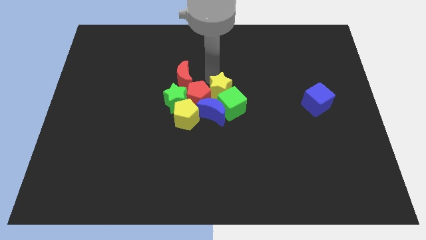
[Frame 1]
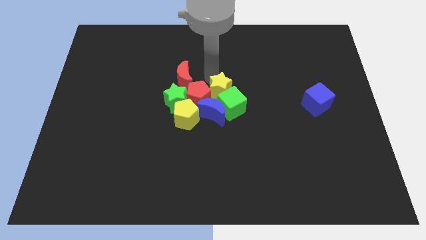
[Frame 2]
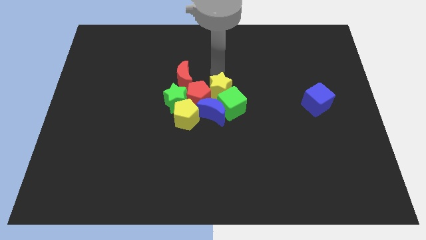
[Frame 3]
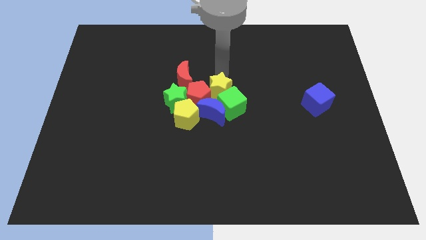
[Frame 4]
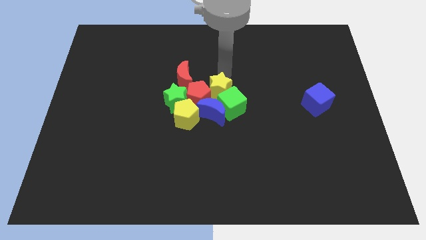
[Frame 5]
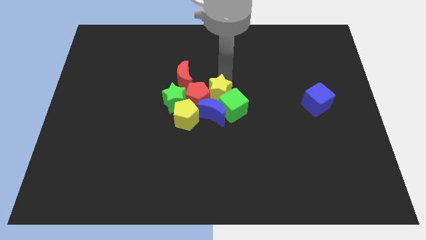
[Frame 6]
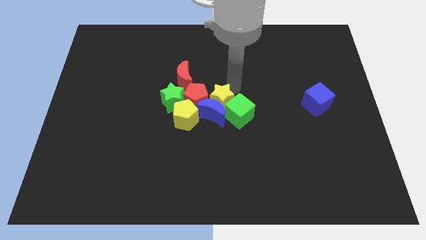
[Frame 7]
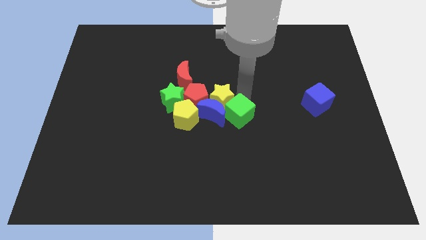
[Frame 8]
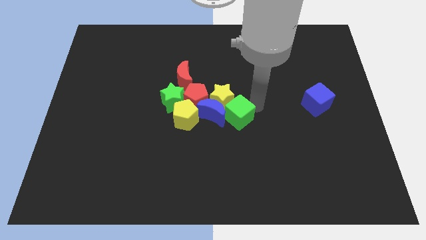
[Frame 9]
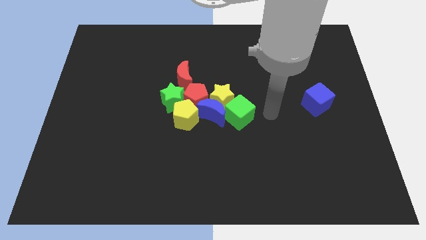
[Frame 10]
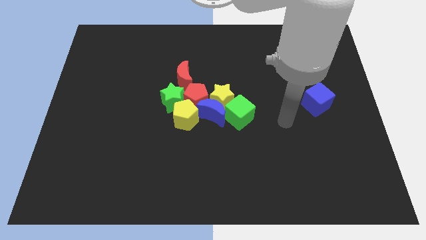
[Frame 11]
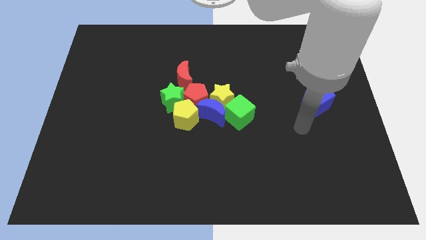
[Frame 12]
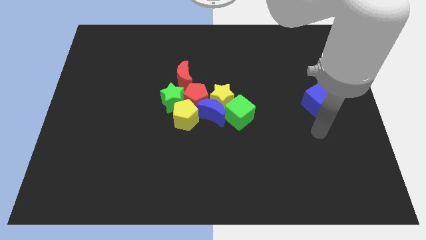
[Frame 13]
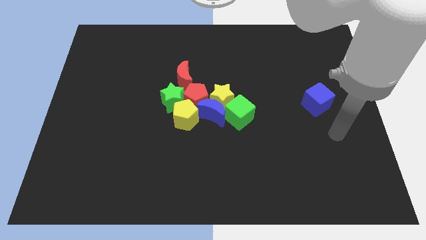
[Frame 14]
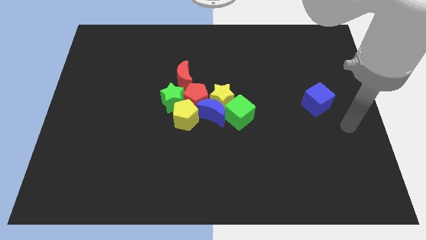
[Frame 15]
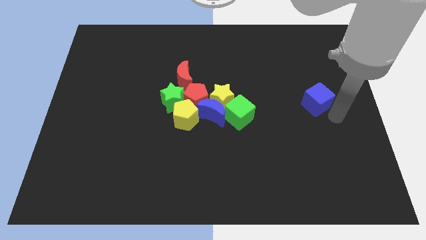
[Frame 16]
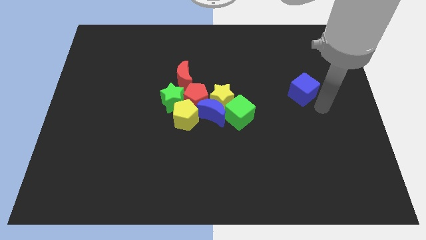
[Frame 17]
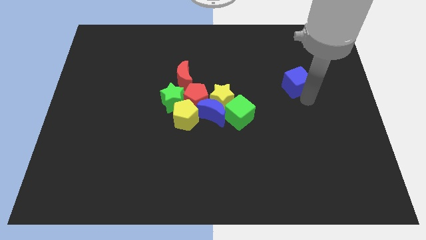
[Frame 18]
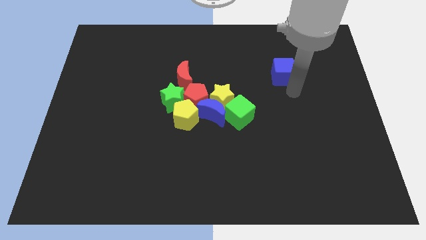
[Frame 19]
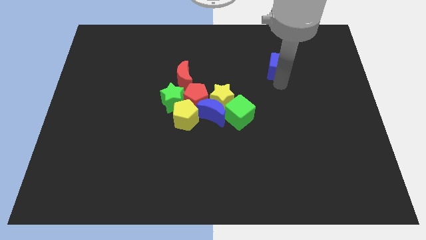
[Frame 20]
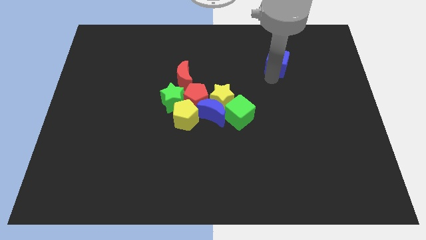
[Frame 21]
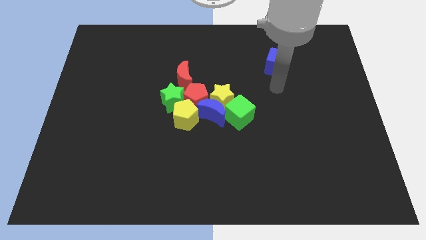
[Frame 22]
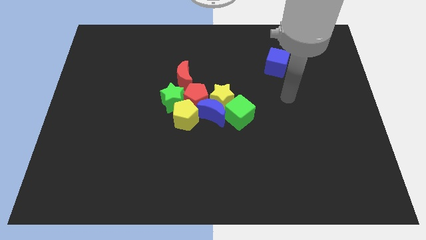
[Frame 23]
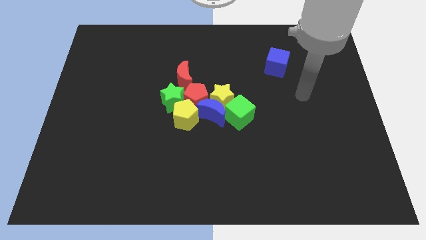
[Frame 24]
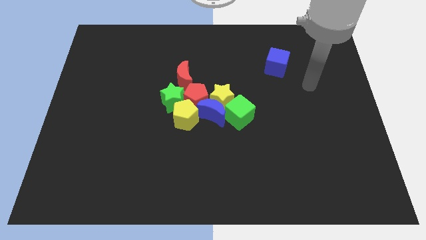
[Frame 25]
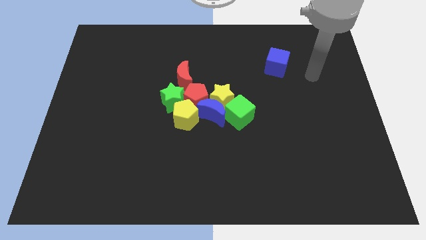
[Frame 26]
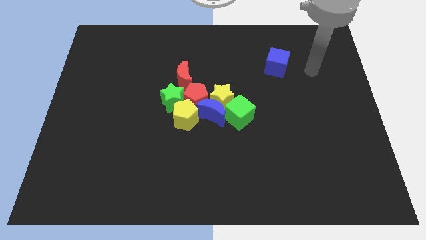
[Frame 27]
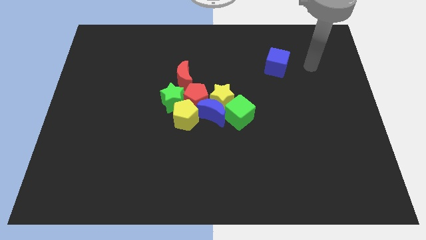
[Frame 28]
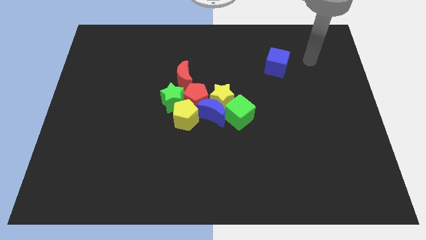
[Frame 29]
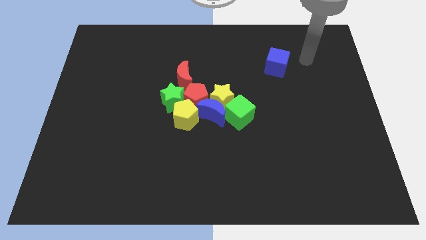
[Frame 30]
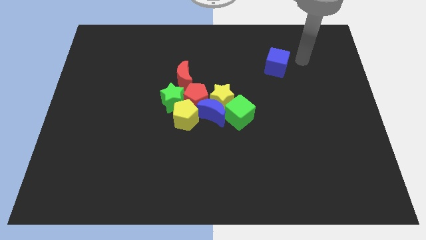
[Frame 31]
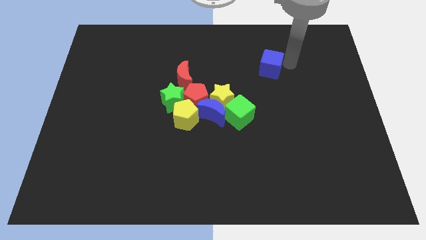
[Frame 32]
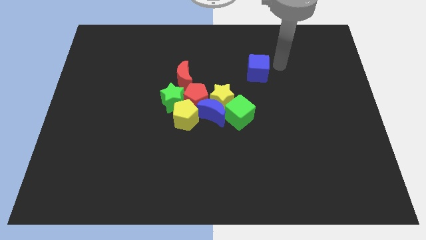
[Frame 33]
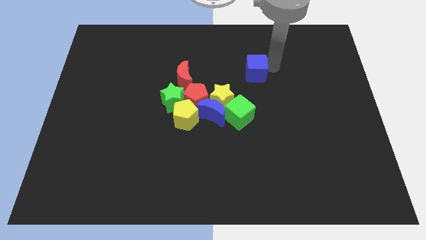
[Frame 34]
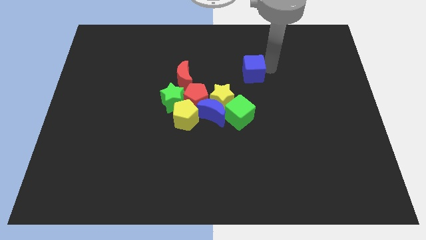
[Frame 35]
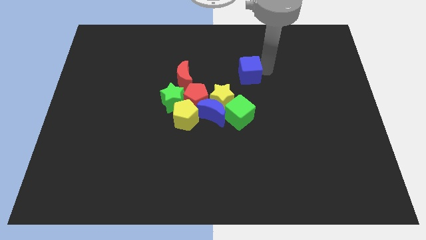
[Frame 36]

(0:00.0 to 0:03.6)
push the blue cube towards the group of blocks

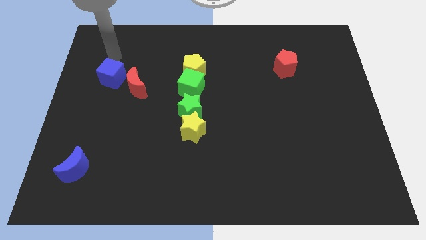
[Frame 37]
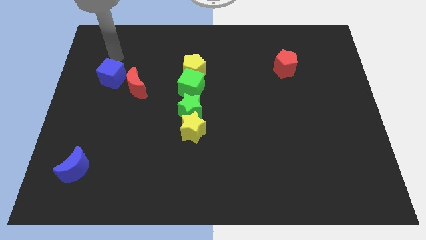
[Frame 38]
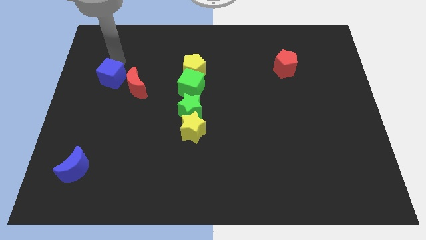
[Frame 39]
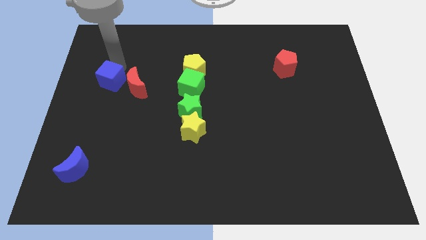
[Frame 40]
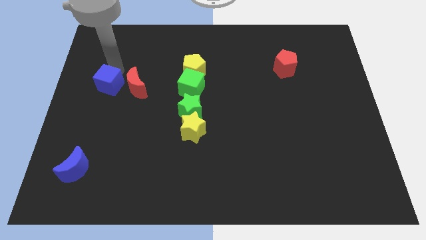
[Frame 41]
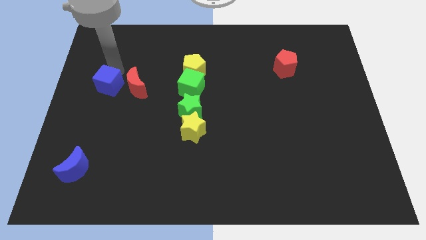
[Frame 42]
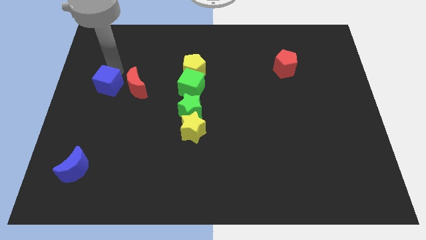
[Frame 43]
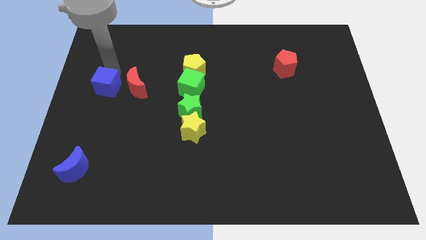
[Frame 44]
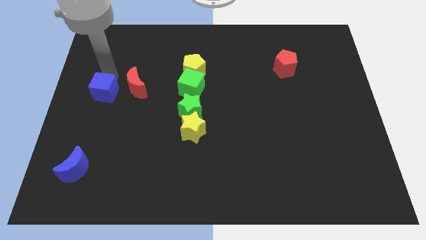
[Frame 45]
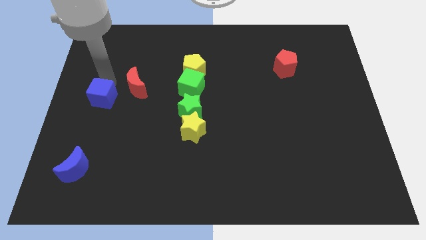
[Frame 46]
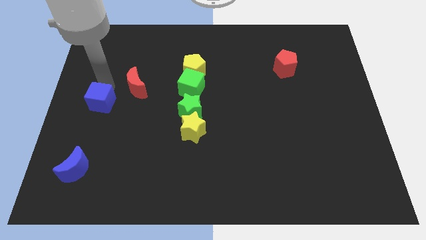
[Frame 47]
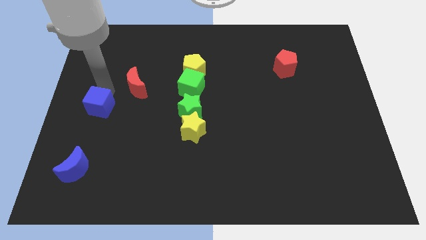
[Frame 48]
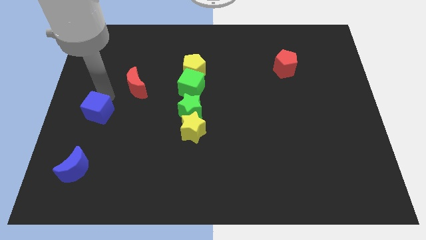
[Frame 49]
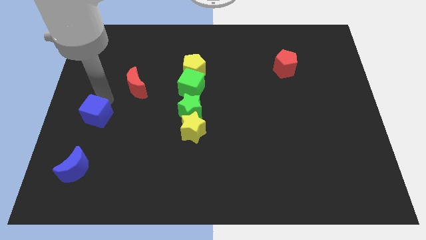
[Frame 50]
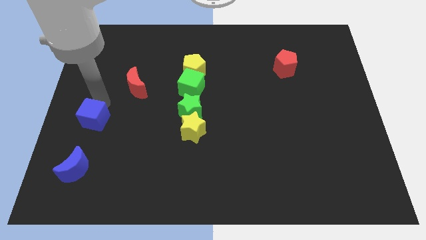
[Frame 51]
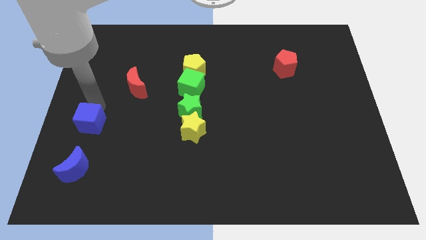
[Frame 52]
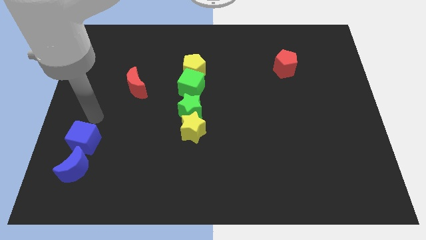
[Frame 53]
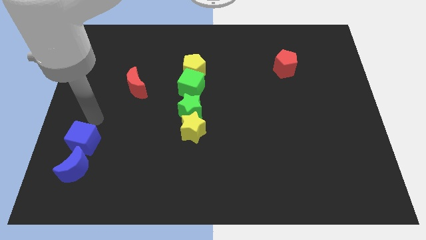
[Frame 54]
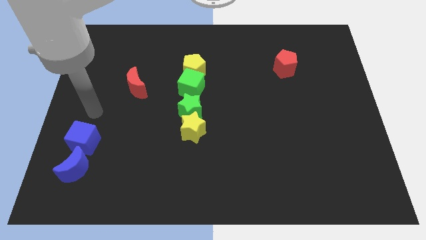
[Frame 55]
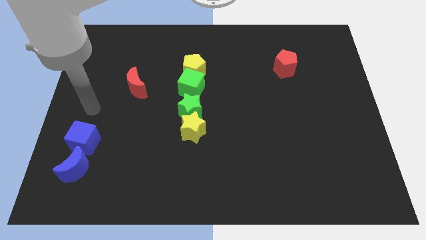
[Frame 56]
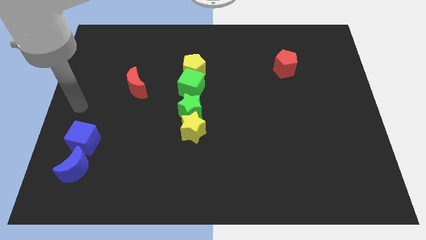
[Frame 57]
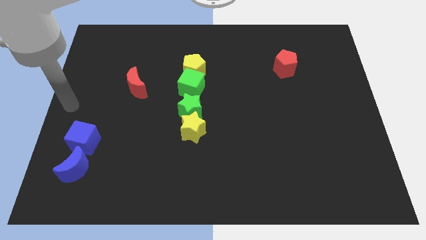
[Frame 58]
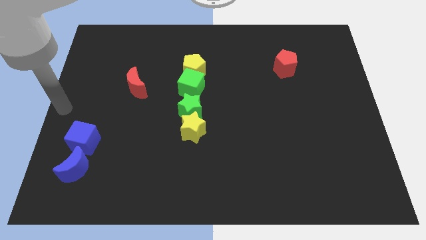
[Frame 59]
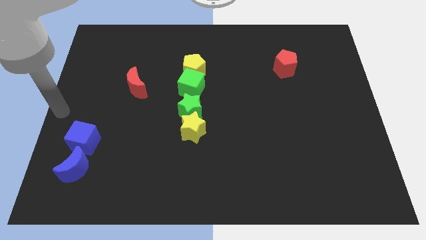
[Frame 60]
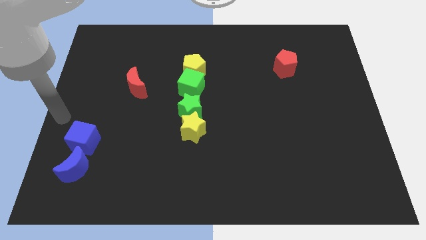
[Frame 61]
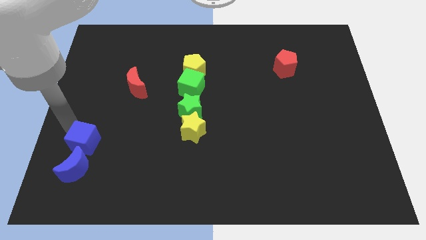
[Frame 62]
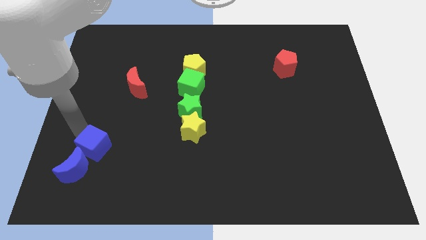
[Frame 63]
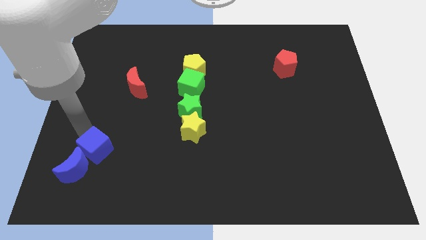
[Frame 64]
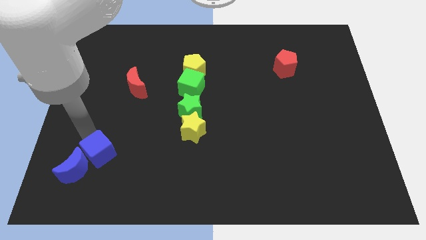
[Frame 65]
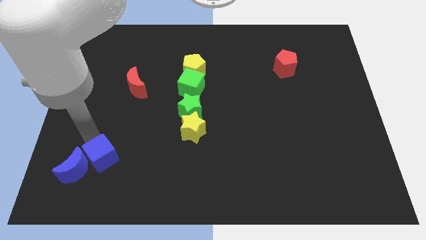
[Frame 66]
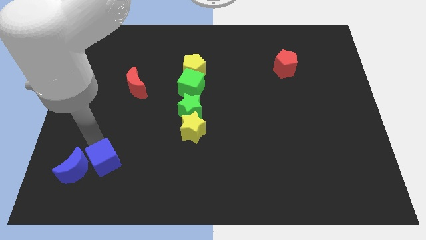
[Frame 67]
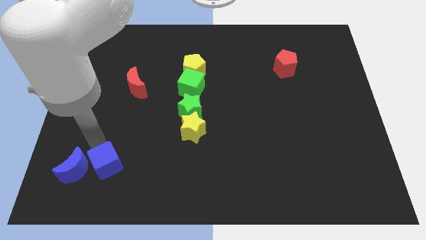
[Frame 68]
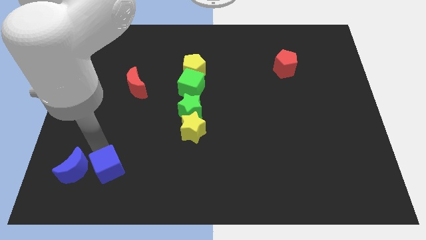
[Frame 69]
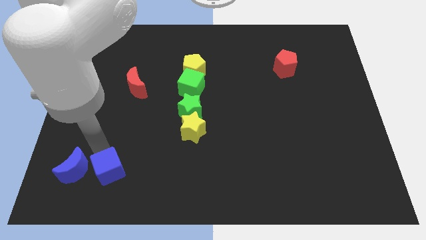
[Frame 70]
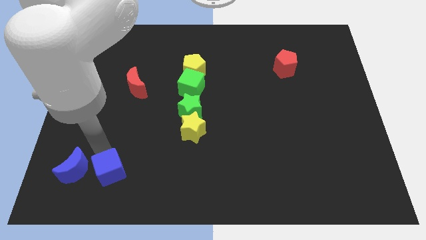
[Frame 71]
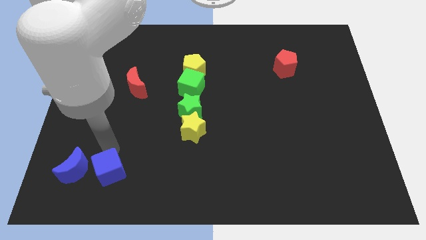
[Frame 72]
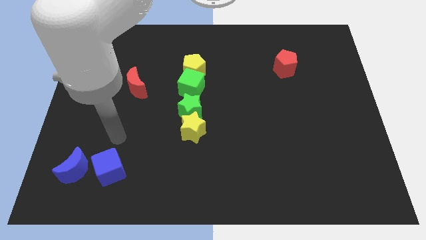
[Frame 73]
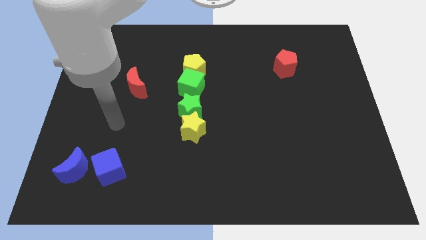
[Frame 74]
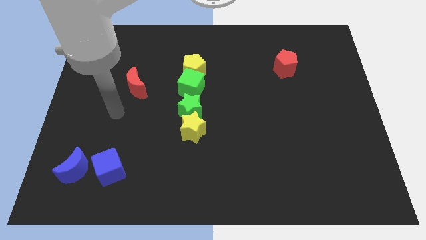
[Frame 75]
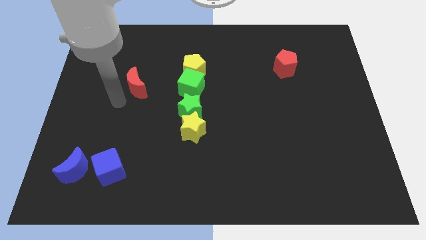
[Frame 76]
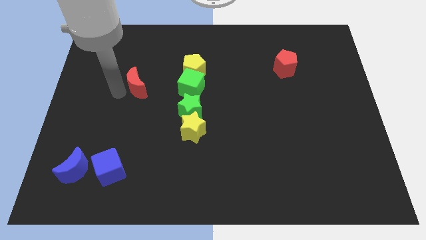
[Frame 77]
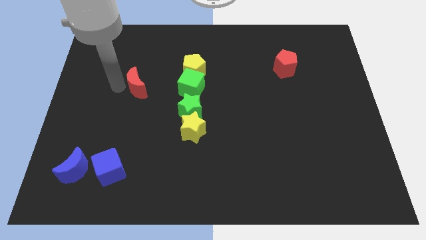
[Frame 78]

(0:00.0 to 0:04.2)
push the blue cube to the right side of the blue moon

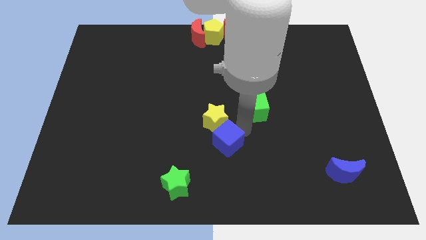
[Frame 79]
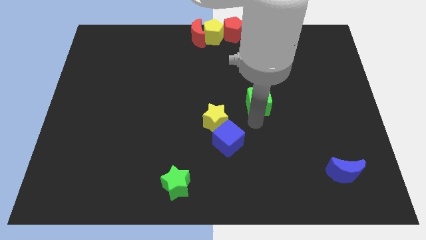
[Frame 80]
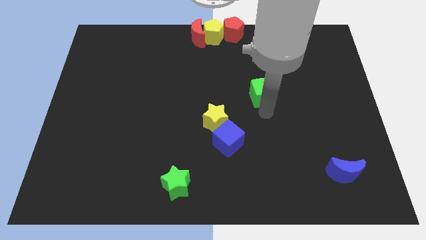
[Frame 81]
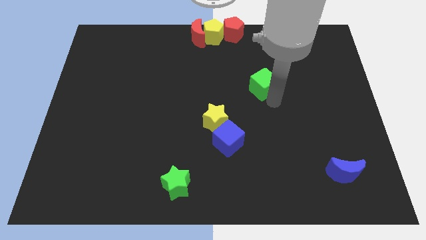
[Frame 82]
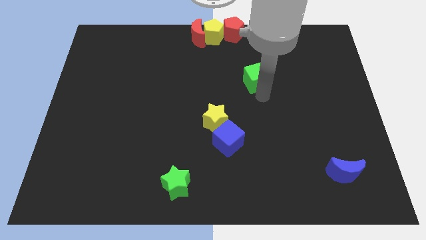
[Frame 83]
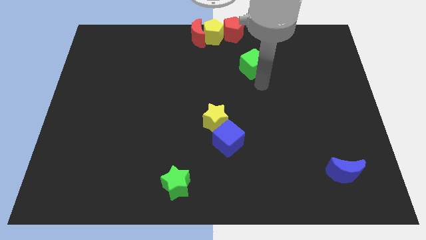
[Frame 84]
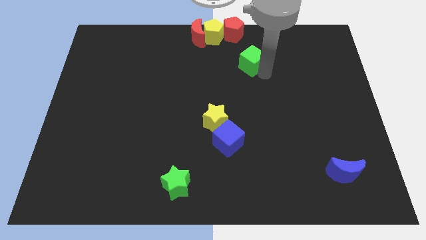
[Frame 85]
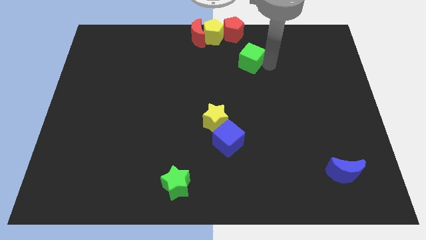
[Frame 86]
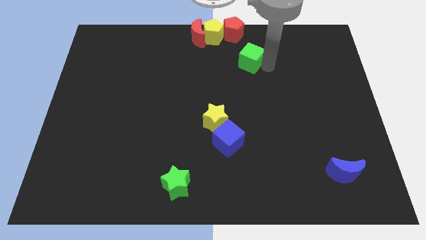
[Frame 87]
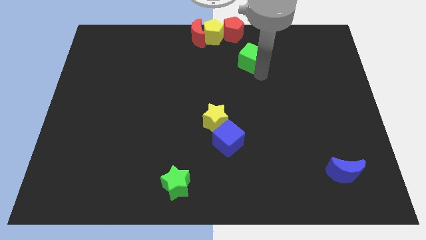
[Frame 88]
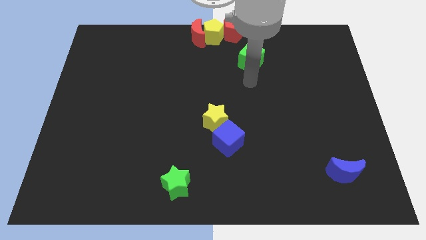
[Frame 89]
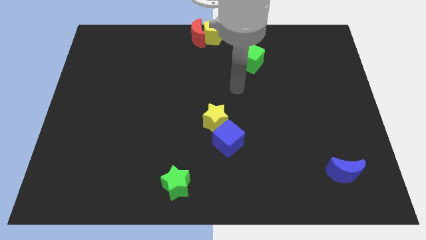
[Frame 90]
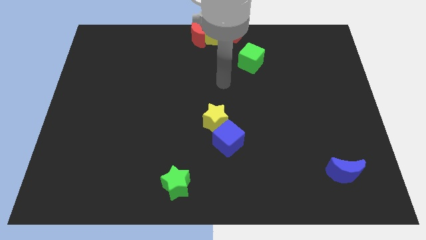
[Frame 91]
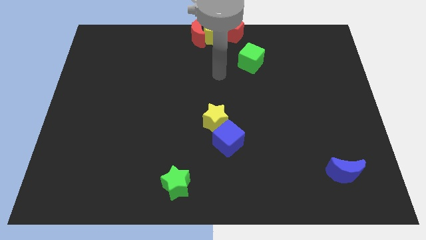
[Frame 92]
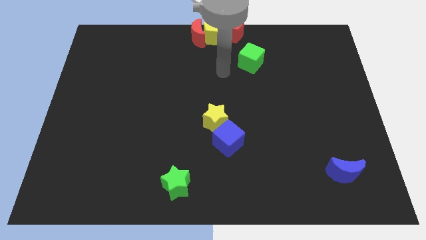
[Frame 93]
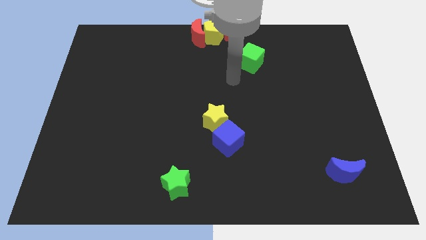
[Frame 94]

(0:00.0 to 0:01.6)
slide the green cube to the bottom right of the red pentagon
